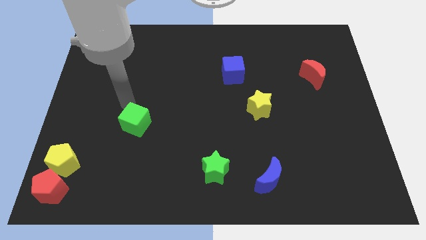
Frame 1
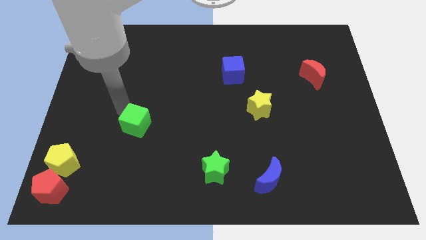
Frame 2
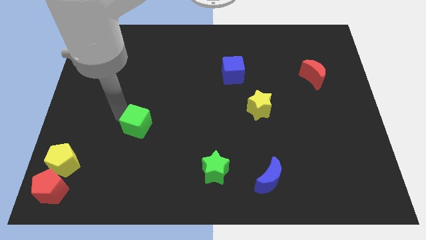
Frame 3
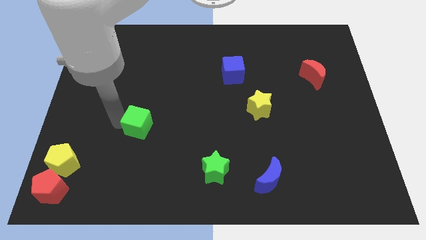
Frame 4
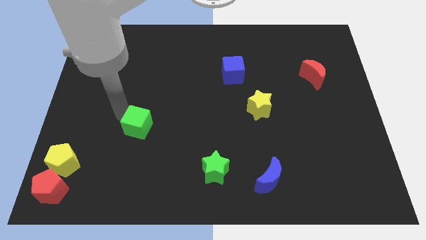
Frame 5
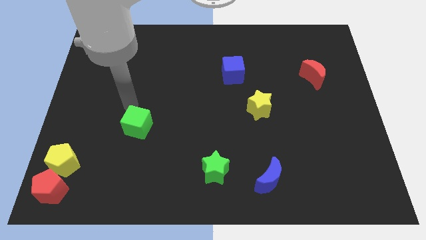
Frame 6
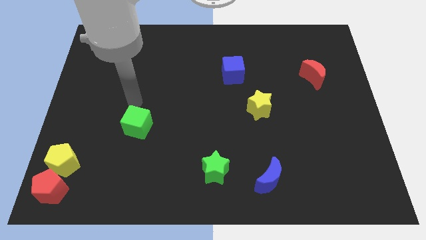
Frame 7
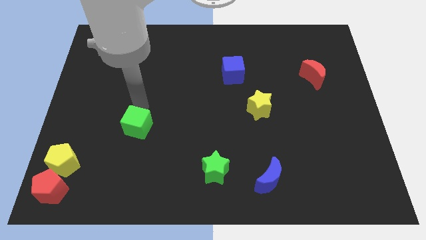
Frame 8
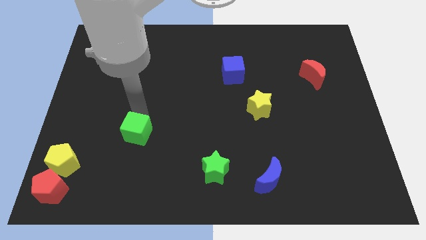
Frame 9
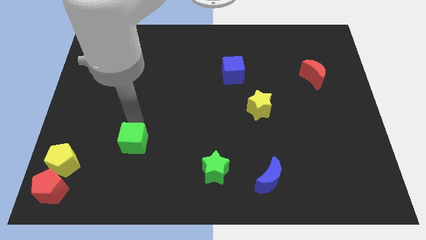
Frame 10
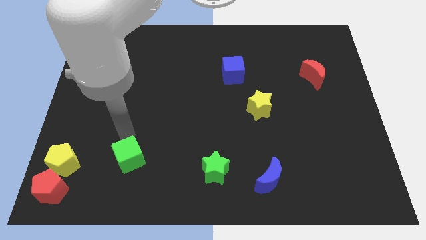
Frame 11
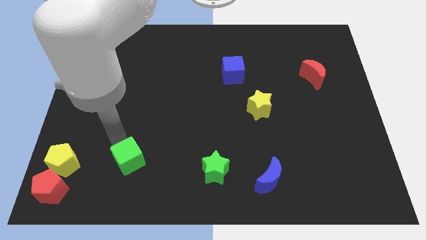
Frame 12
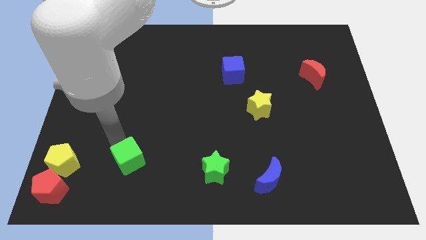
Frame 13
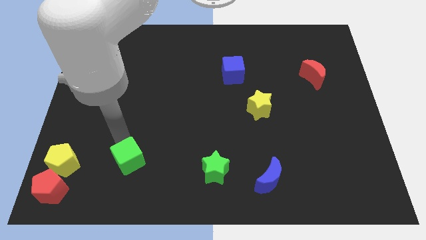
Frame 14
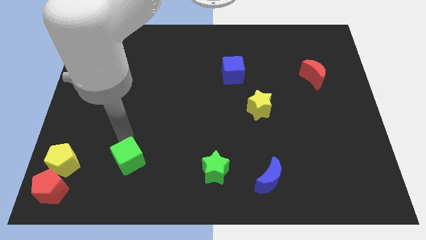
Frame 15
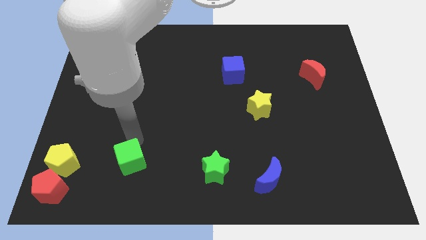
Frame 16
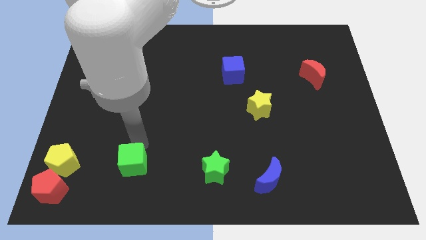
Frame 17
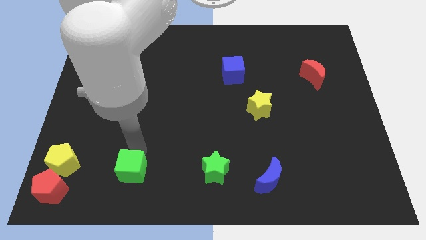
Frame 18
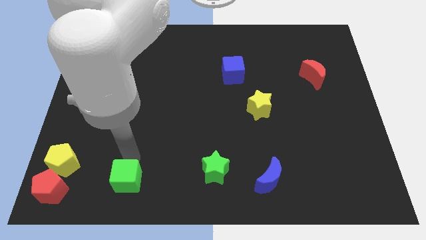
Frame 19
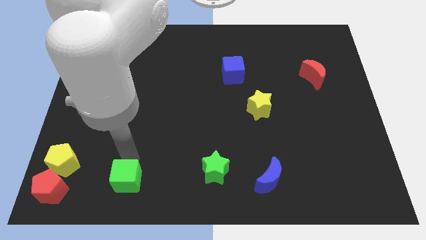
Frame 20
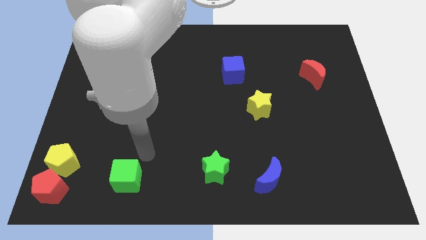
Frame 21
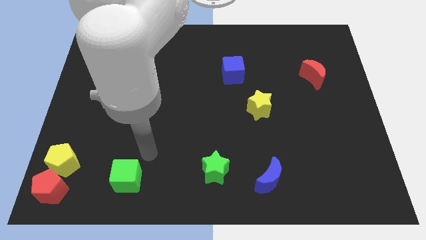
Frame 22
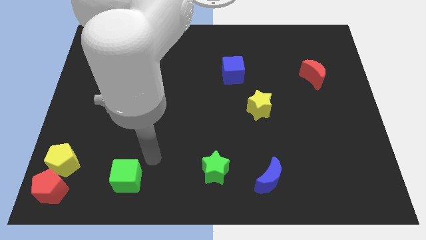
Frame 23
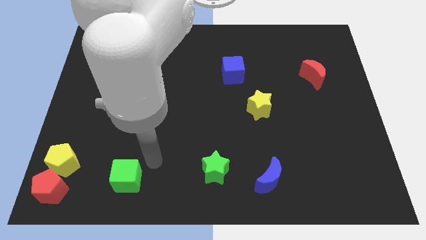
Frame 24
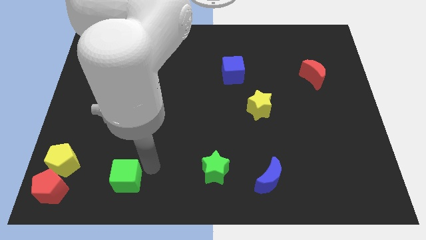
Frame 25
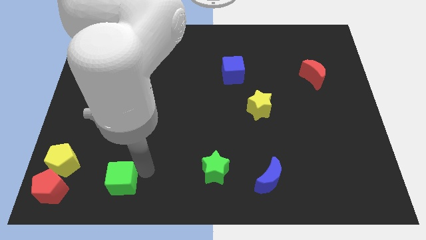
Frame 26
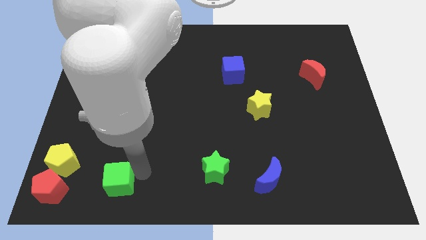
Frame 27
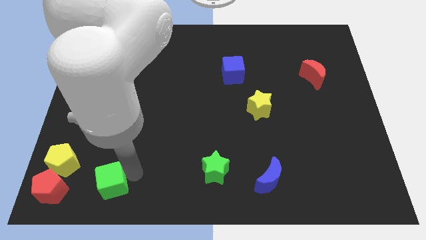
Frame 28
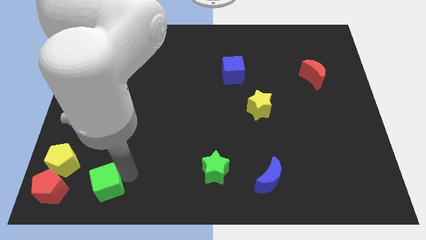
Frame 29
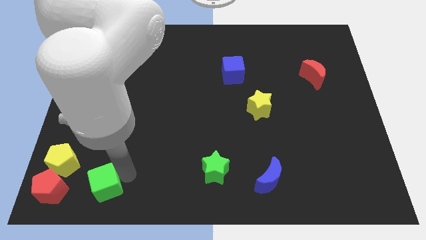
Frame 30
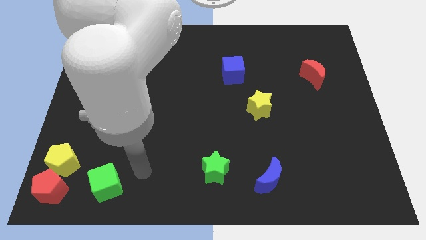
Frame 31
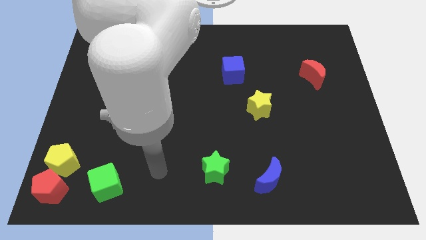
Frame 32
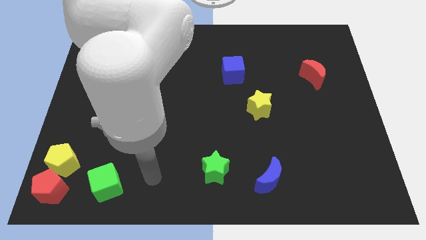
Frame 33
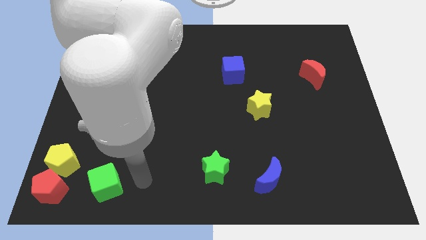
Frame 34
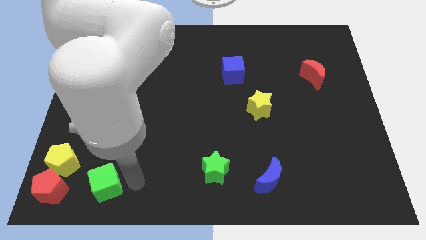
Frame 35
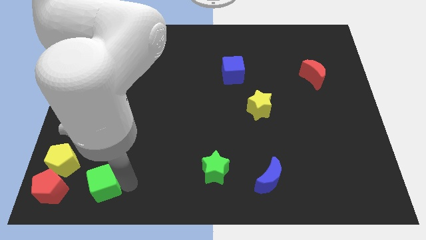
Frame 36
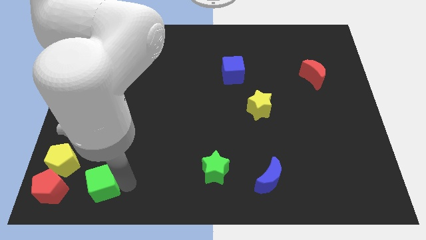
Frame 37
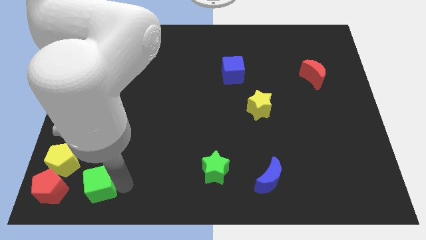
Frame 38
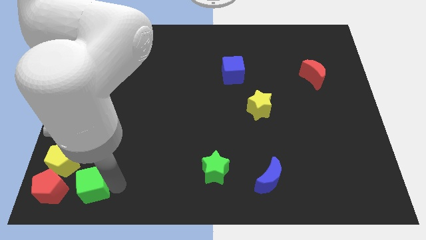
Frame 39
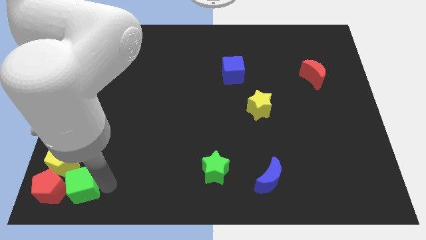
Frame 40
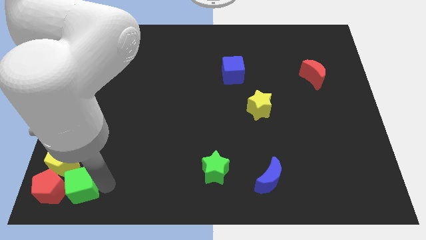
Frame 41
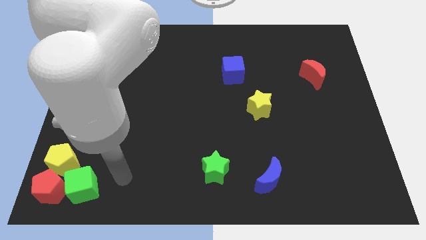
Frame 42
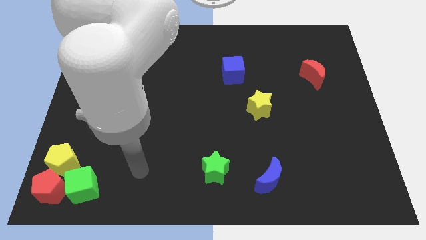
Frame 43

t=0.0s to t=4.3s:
place green cube right to red pentagon

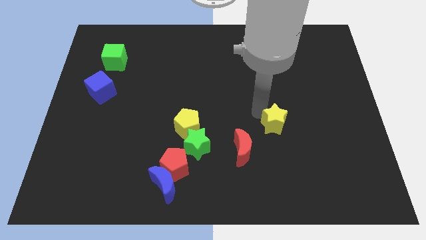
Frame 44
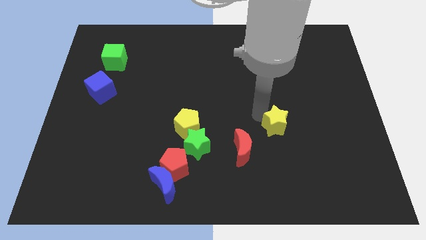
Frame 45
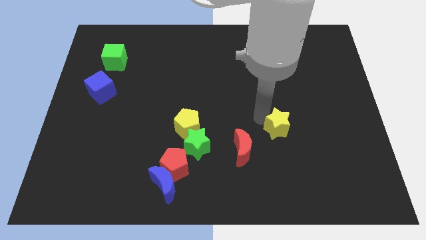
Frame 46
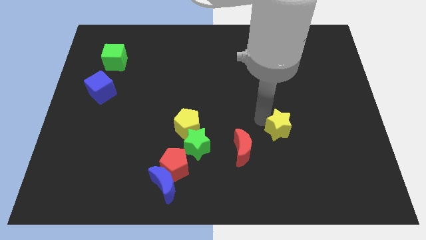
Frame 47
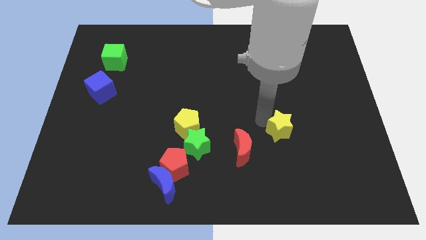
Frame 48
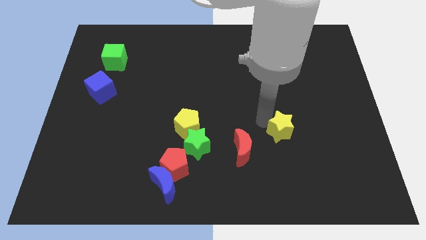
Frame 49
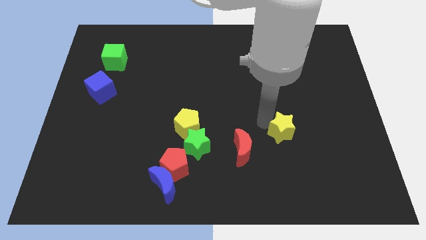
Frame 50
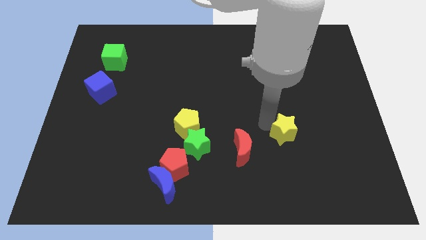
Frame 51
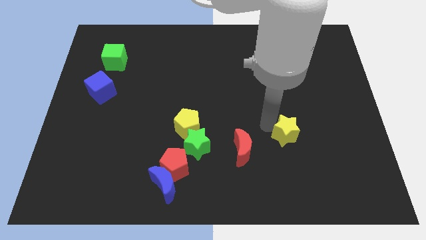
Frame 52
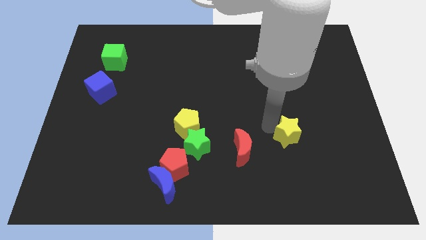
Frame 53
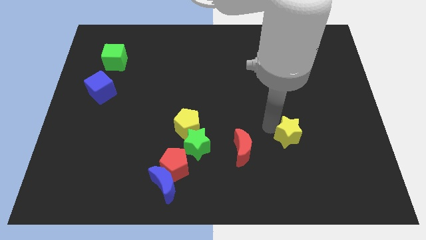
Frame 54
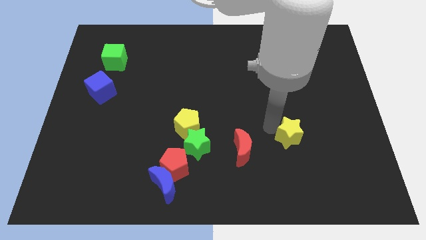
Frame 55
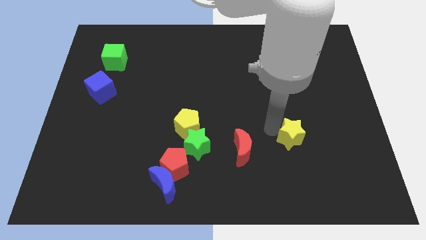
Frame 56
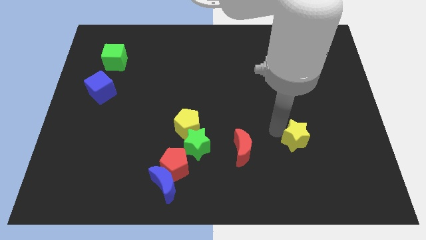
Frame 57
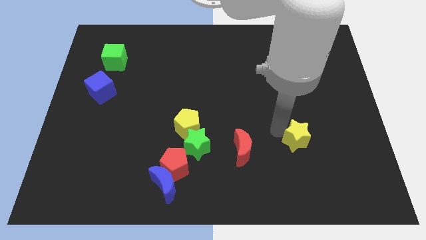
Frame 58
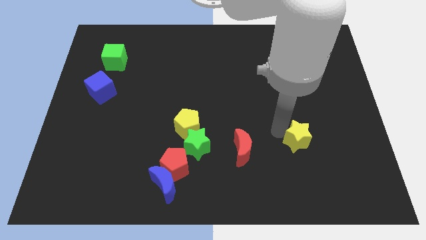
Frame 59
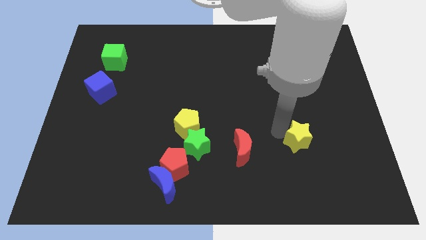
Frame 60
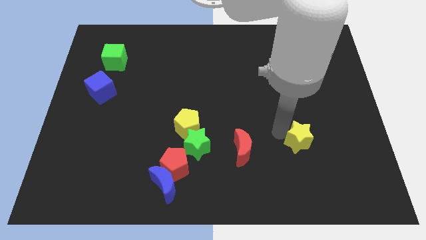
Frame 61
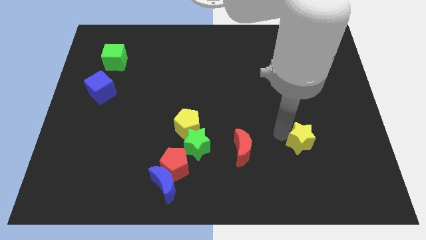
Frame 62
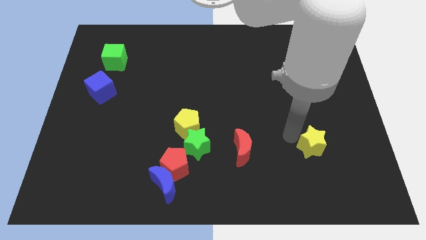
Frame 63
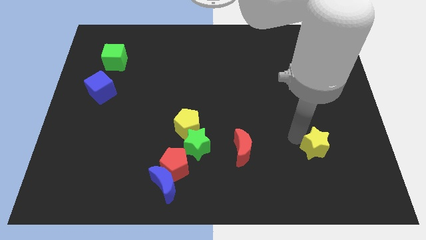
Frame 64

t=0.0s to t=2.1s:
push yellow star right to the red crescent

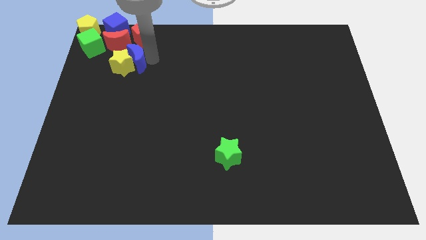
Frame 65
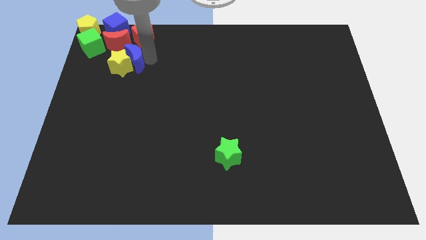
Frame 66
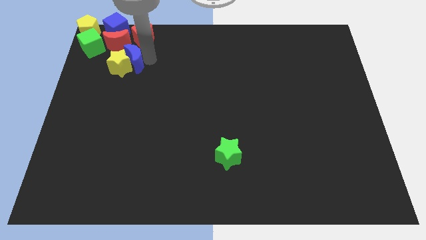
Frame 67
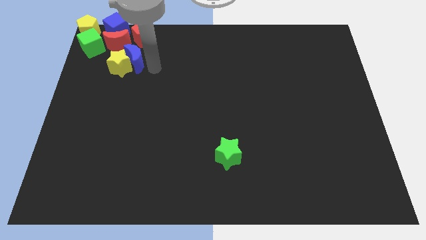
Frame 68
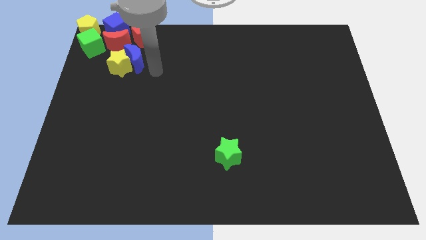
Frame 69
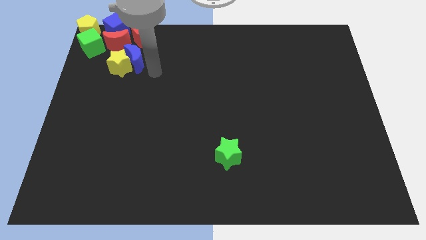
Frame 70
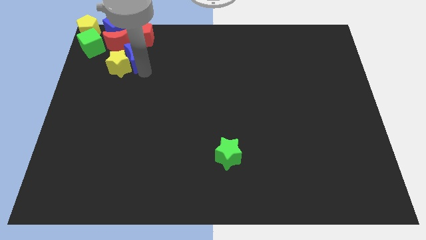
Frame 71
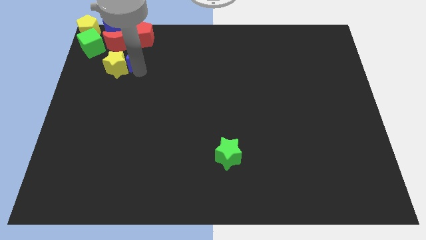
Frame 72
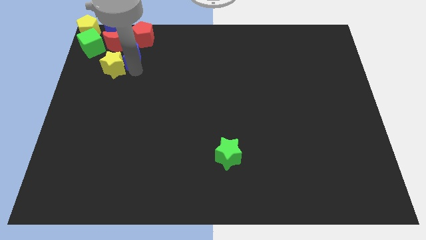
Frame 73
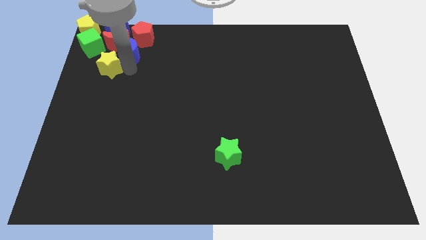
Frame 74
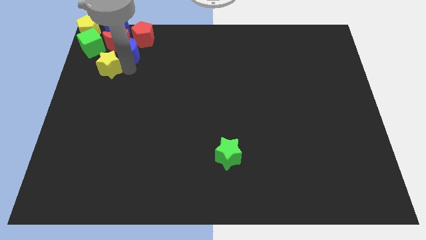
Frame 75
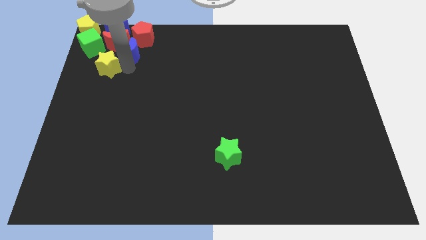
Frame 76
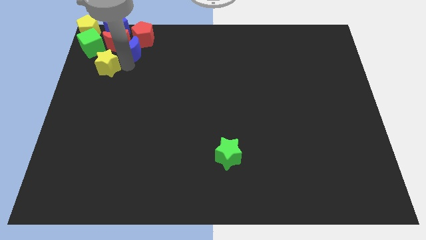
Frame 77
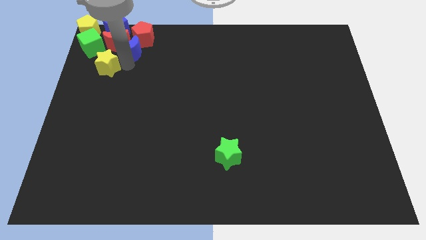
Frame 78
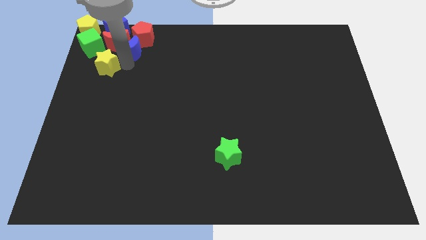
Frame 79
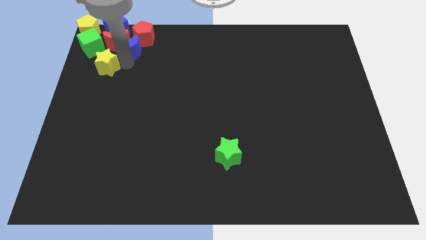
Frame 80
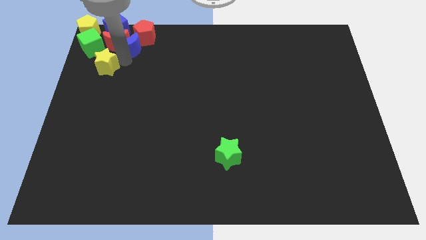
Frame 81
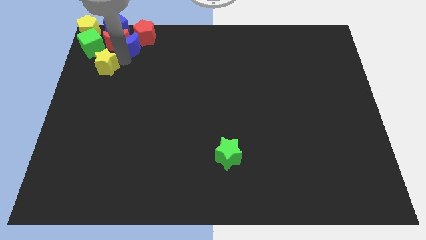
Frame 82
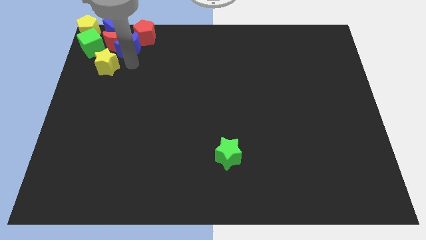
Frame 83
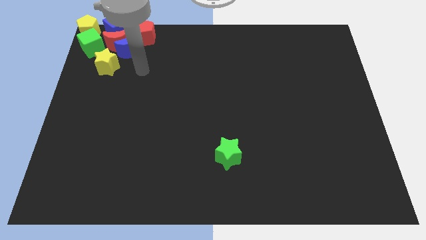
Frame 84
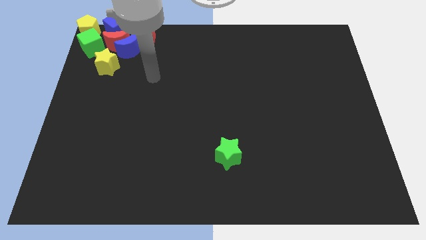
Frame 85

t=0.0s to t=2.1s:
slightly move forward the blue moon and yellow star

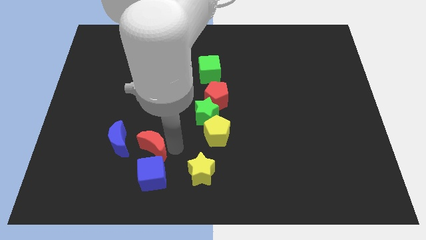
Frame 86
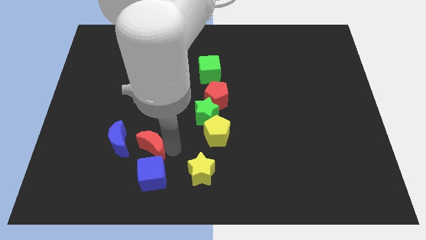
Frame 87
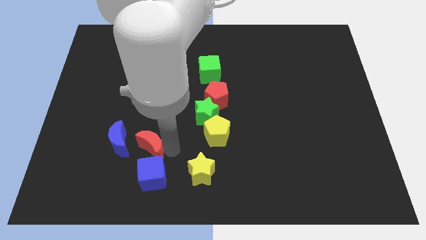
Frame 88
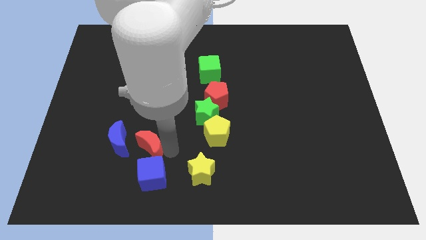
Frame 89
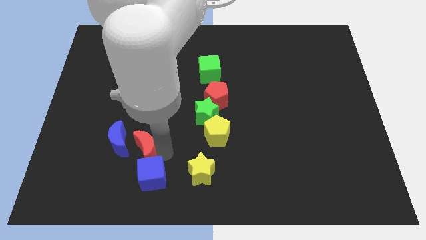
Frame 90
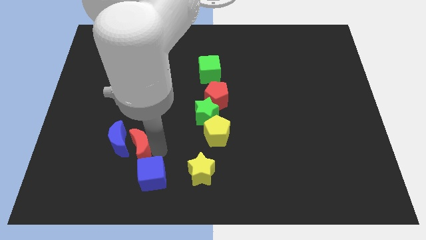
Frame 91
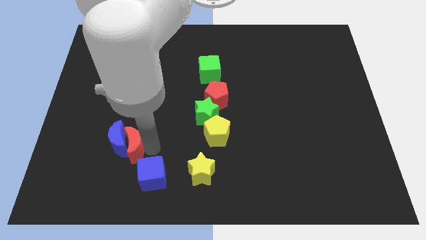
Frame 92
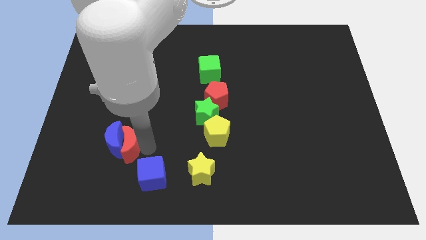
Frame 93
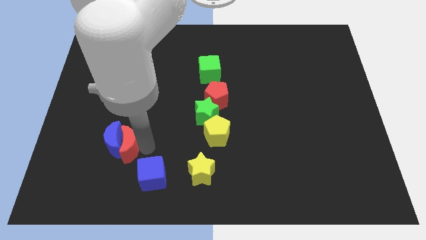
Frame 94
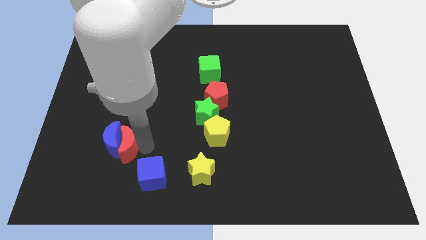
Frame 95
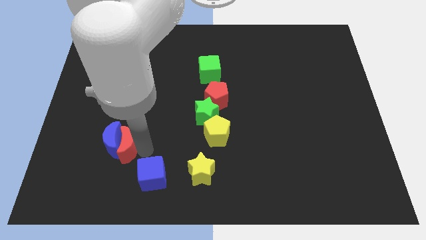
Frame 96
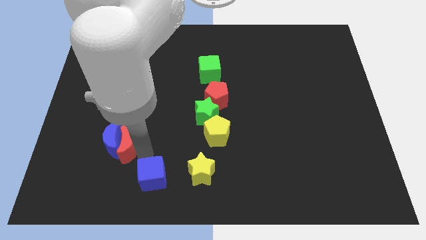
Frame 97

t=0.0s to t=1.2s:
push red crescent into the blue crescent
